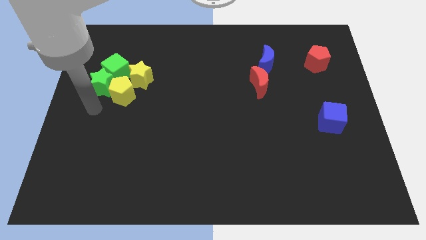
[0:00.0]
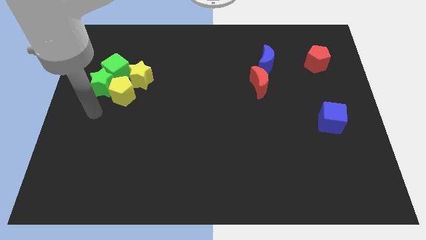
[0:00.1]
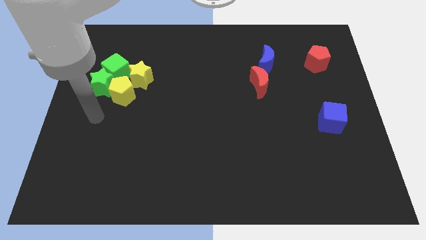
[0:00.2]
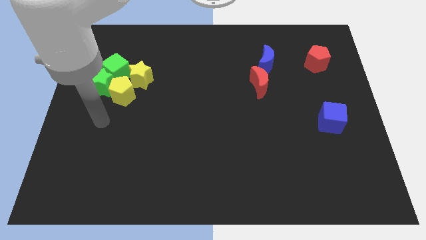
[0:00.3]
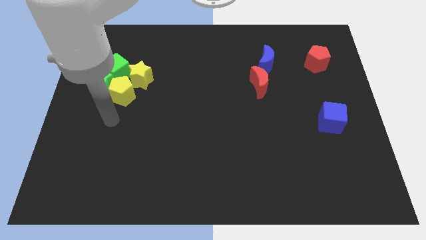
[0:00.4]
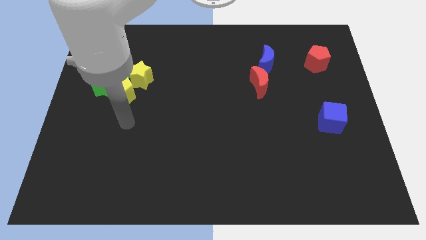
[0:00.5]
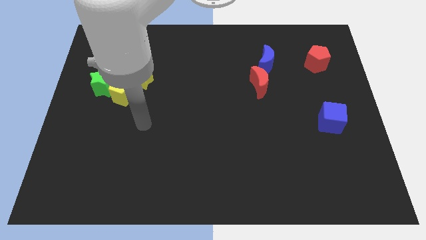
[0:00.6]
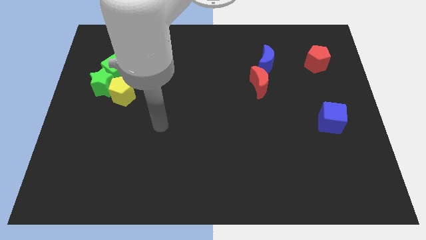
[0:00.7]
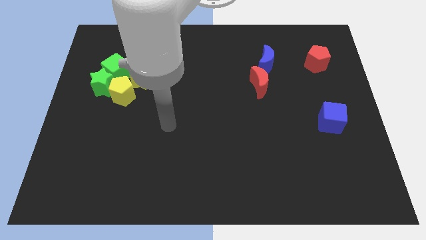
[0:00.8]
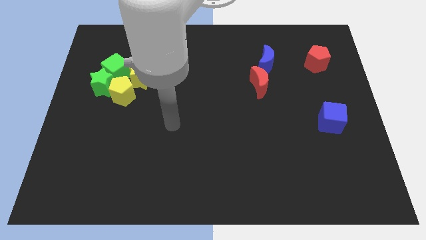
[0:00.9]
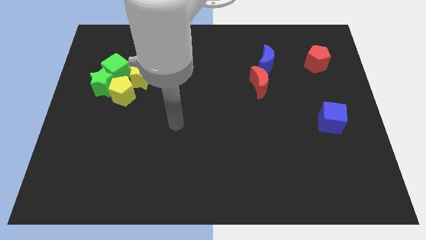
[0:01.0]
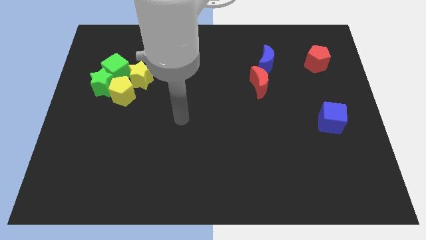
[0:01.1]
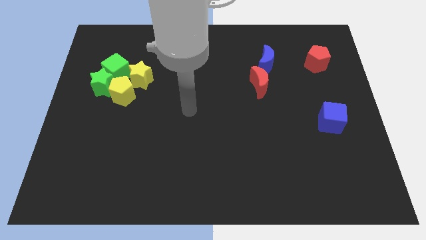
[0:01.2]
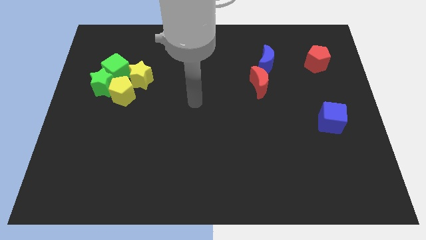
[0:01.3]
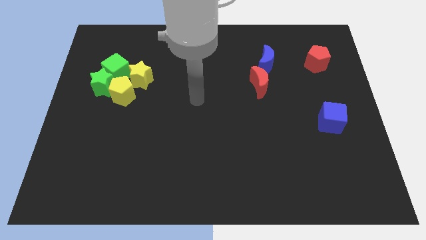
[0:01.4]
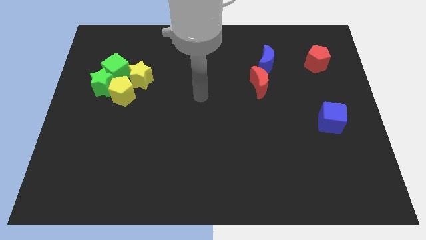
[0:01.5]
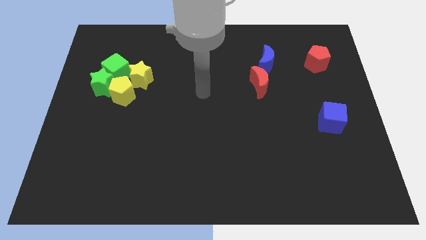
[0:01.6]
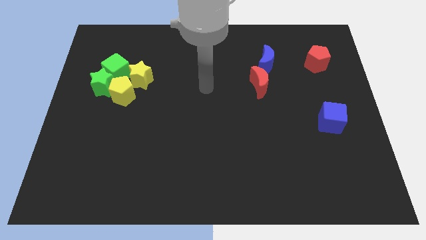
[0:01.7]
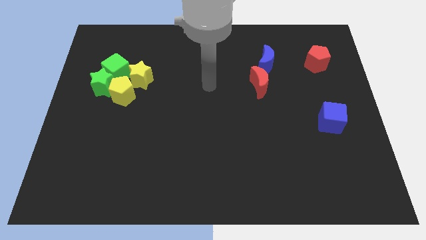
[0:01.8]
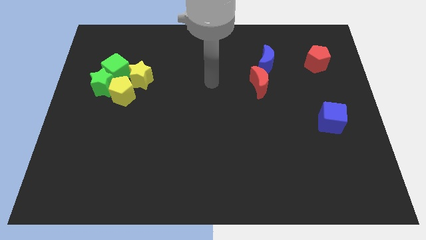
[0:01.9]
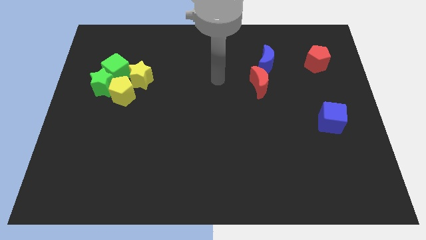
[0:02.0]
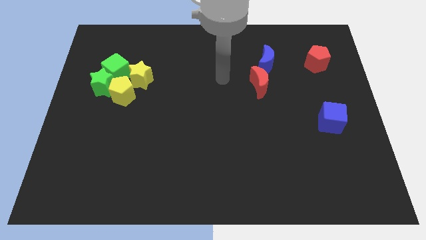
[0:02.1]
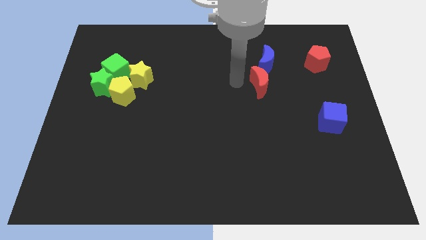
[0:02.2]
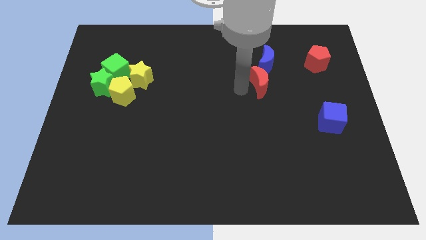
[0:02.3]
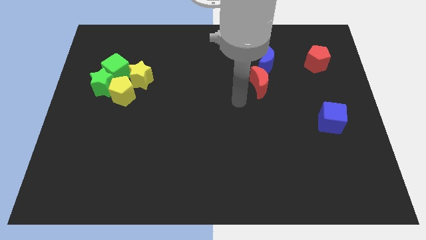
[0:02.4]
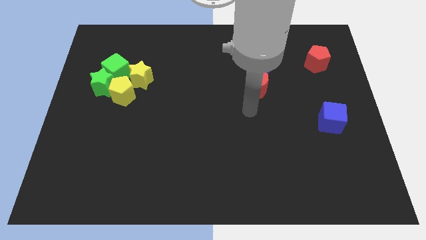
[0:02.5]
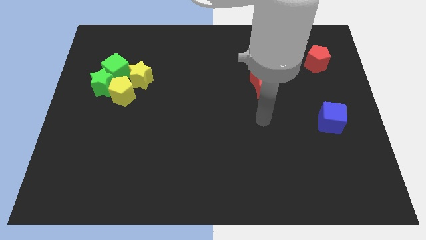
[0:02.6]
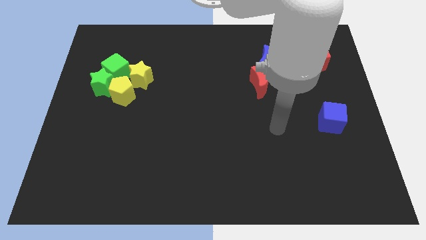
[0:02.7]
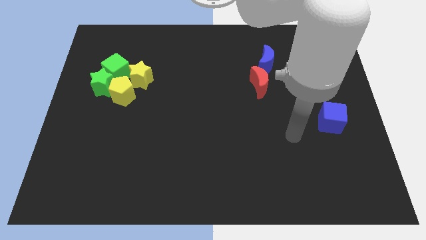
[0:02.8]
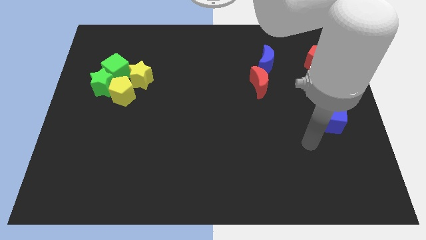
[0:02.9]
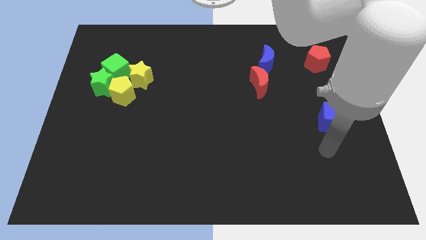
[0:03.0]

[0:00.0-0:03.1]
point your hand at the bottom side of the blue cube

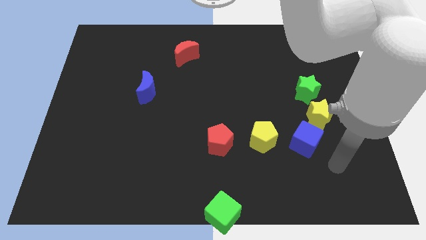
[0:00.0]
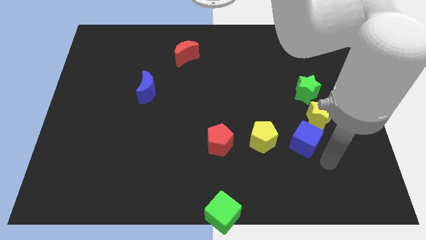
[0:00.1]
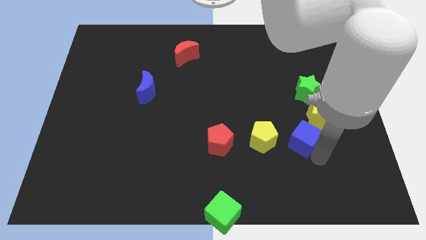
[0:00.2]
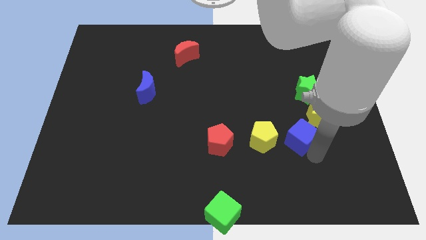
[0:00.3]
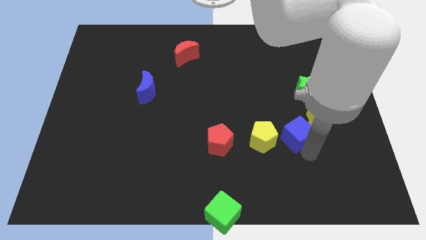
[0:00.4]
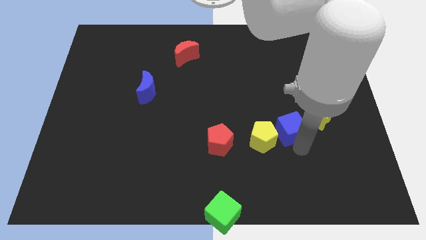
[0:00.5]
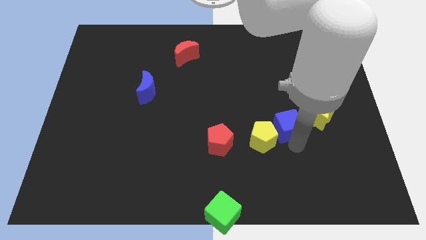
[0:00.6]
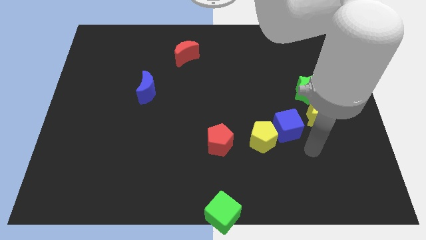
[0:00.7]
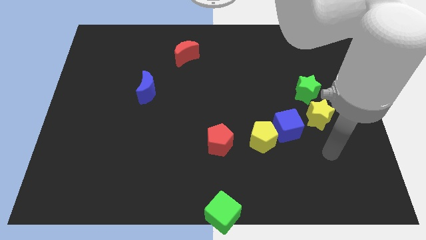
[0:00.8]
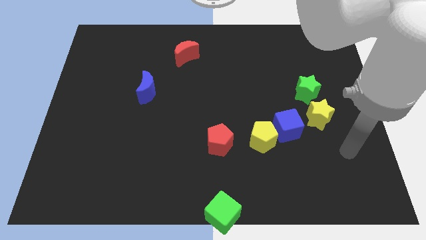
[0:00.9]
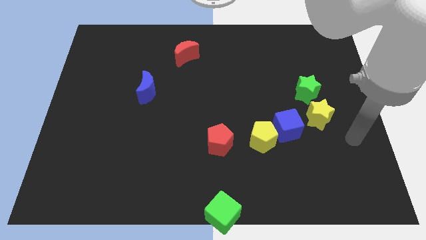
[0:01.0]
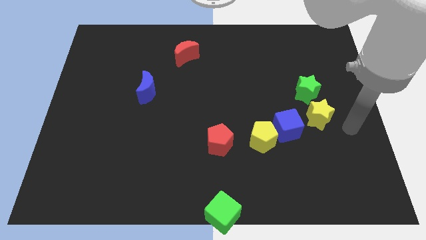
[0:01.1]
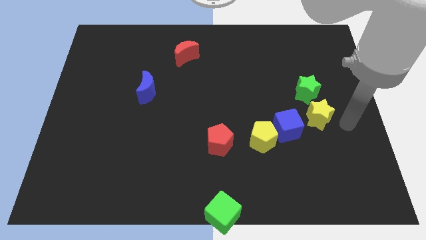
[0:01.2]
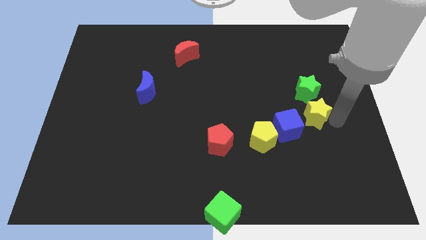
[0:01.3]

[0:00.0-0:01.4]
slightly move the blue cube to the right side of yellow pentagon

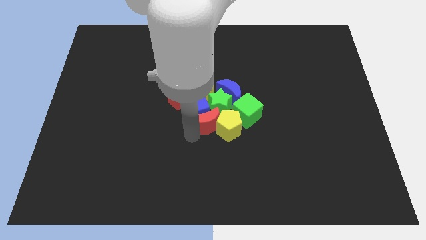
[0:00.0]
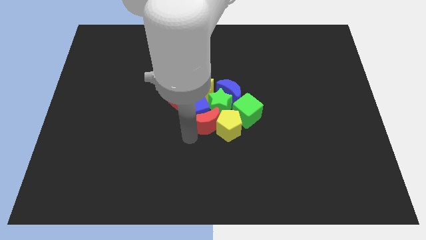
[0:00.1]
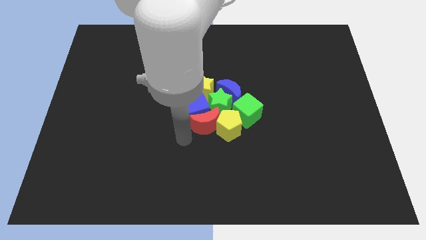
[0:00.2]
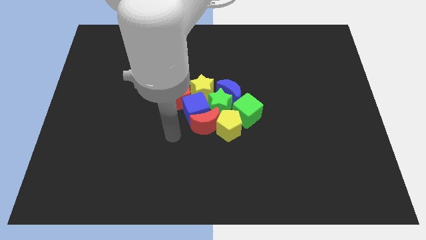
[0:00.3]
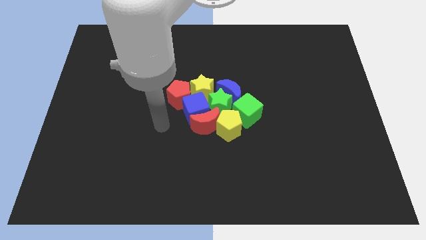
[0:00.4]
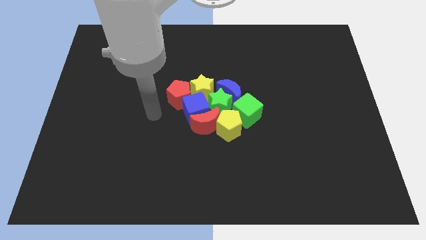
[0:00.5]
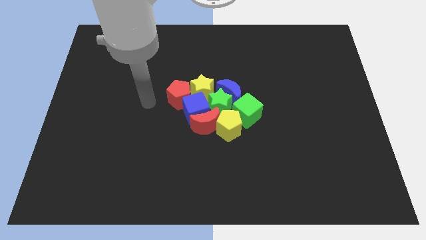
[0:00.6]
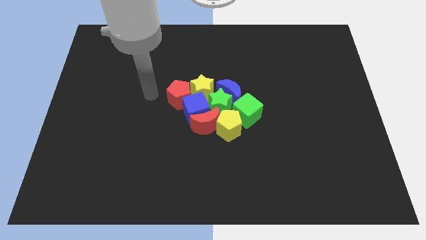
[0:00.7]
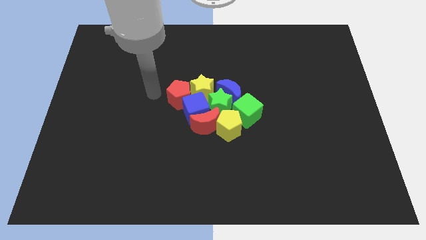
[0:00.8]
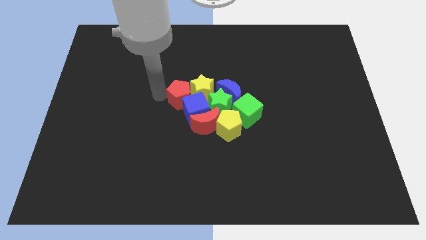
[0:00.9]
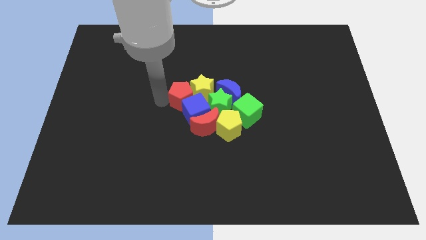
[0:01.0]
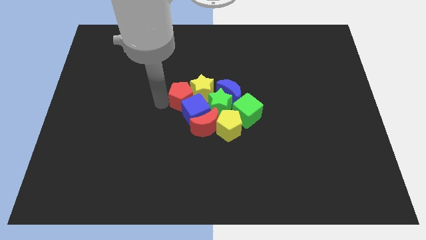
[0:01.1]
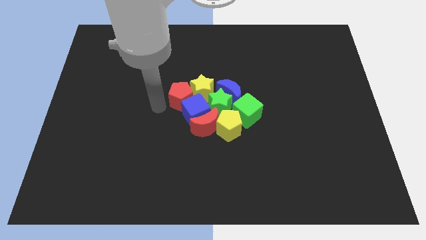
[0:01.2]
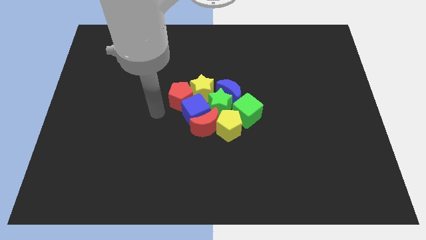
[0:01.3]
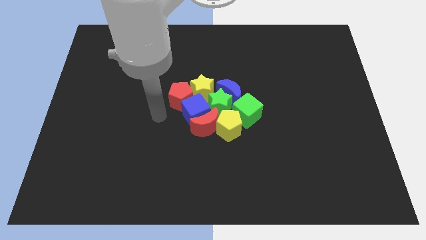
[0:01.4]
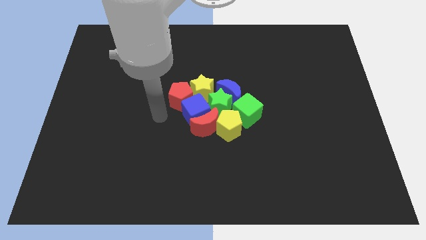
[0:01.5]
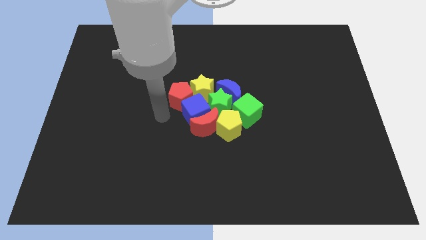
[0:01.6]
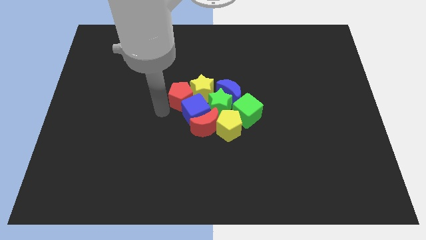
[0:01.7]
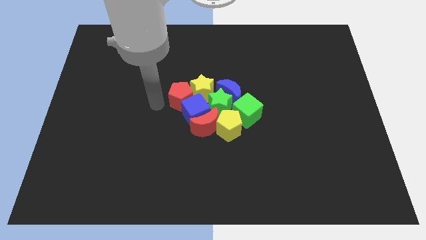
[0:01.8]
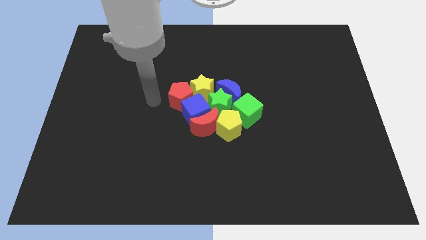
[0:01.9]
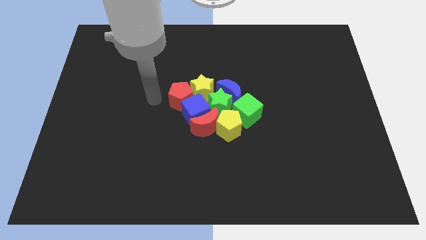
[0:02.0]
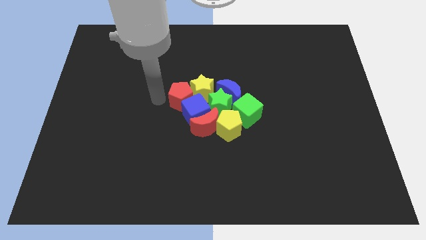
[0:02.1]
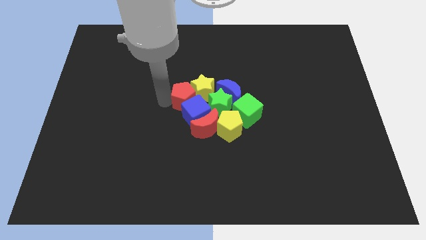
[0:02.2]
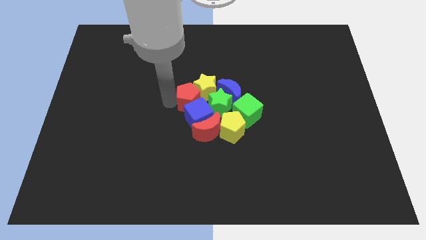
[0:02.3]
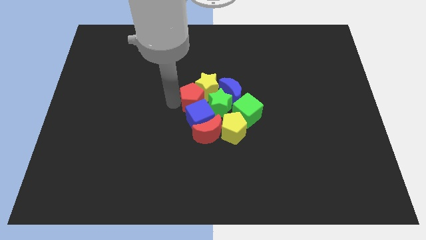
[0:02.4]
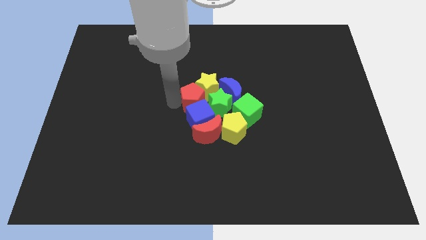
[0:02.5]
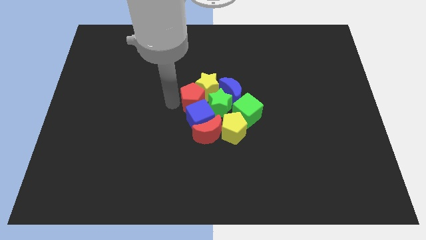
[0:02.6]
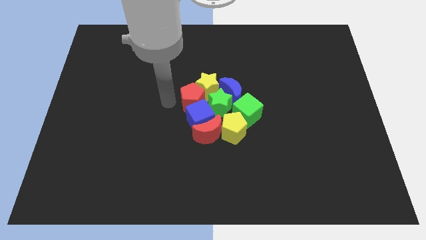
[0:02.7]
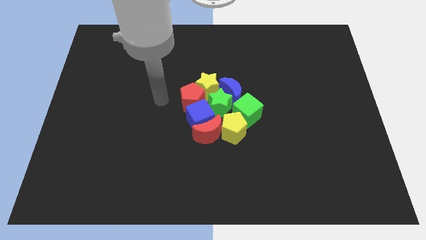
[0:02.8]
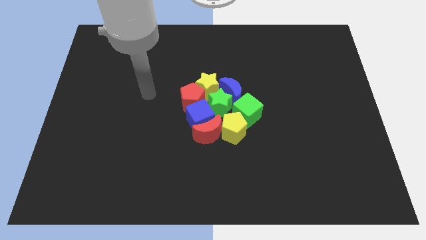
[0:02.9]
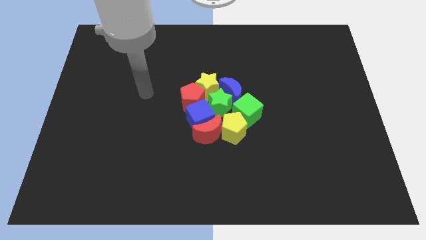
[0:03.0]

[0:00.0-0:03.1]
push the red pentagon into the group of blocks

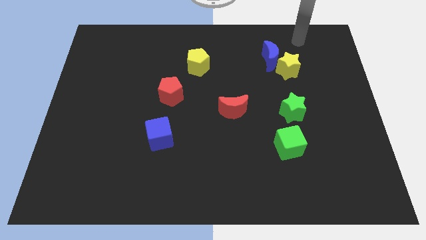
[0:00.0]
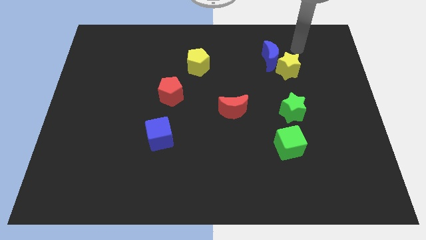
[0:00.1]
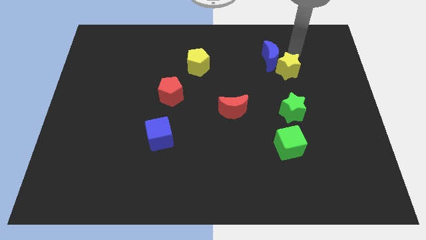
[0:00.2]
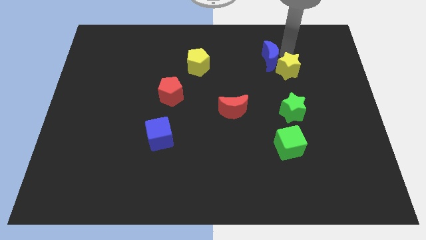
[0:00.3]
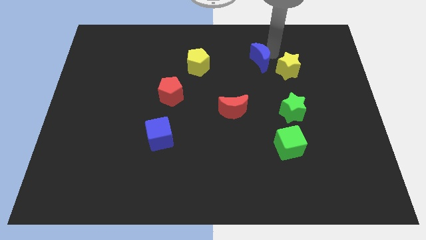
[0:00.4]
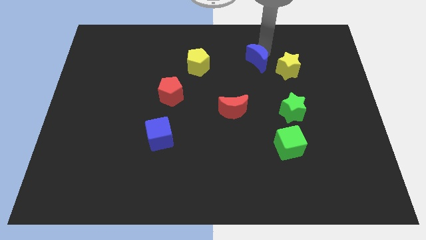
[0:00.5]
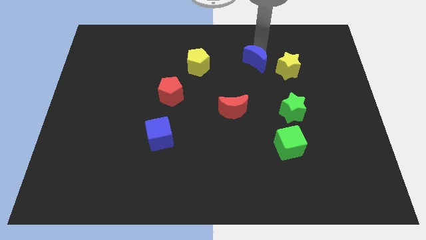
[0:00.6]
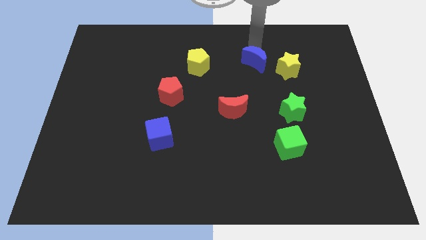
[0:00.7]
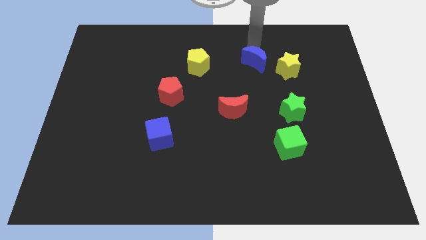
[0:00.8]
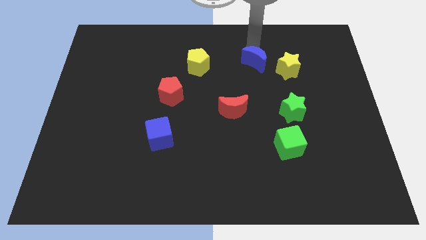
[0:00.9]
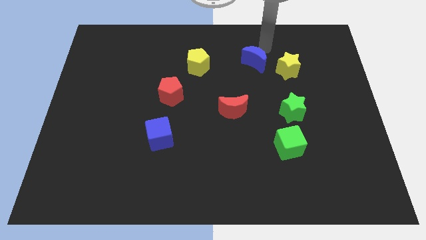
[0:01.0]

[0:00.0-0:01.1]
separate blue moon and yellow star

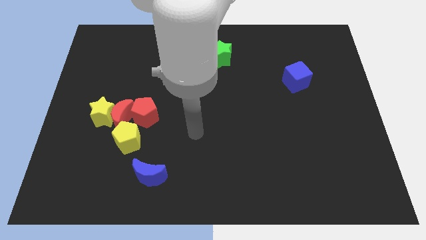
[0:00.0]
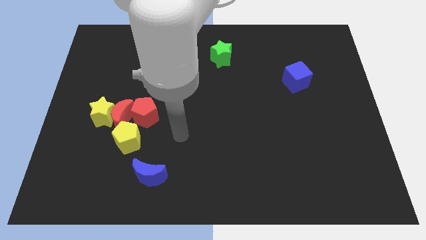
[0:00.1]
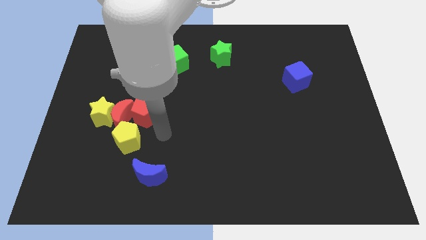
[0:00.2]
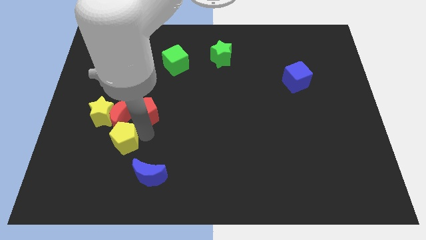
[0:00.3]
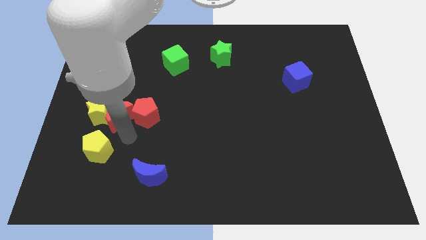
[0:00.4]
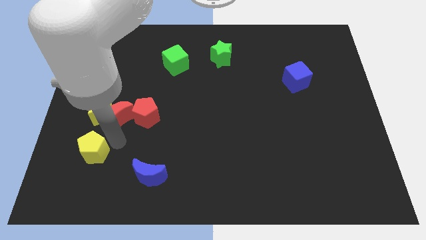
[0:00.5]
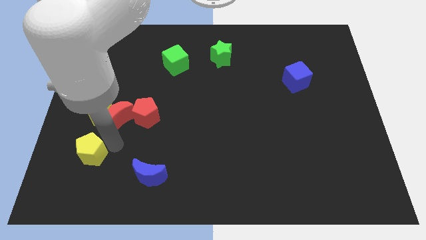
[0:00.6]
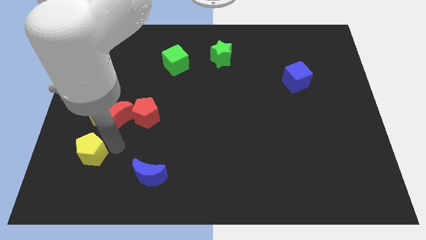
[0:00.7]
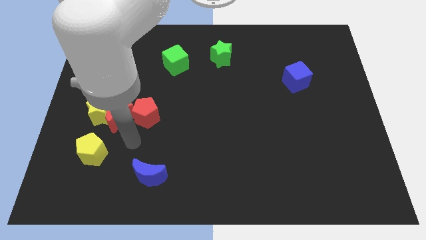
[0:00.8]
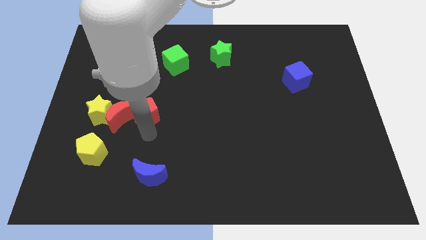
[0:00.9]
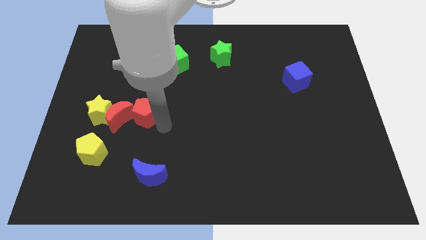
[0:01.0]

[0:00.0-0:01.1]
separate the yellow pentagon from the red crescent
